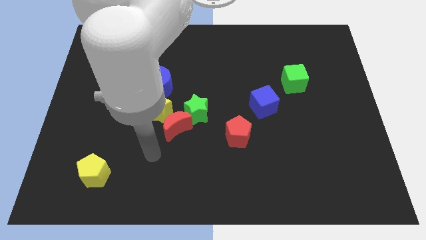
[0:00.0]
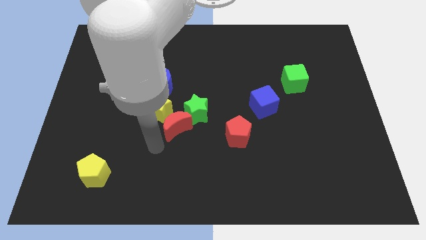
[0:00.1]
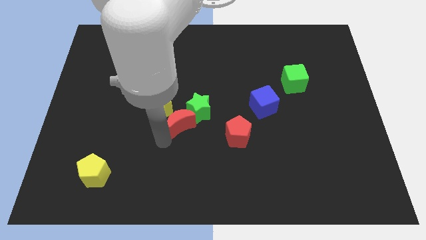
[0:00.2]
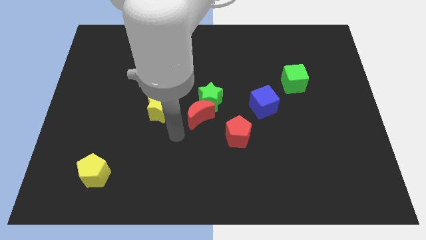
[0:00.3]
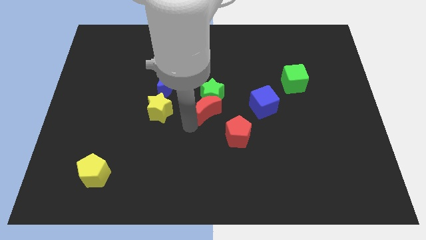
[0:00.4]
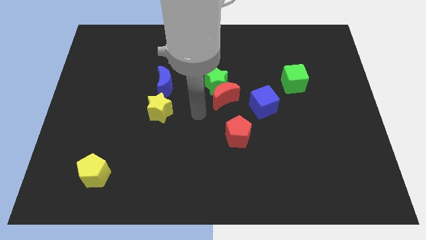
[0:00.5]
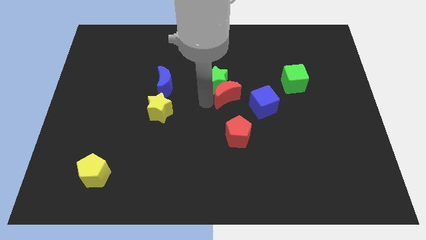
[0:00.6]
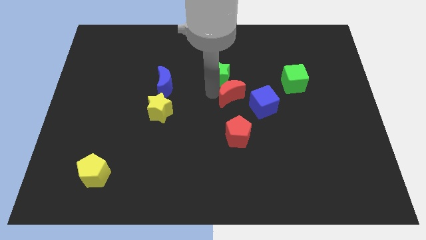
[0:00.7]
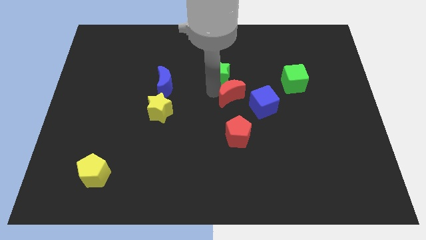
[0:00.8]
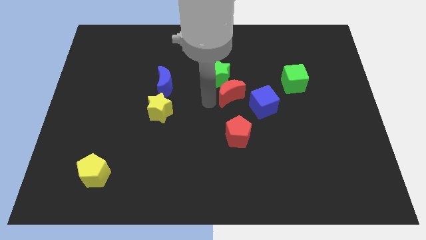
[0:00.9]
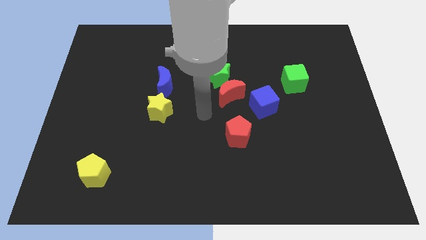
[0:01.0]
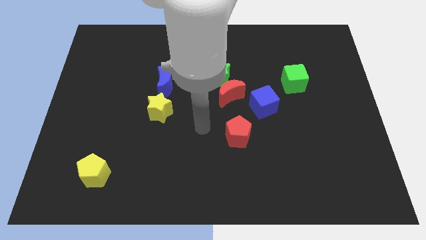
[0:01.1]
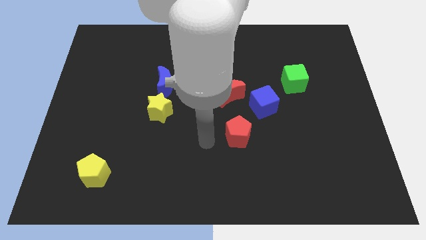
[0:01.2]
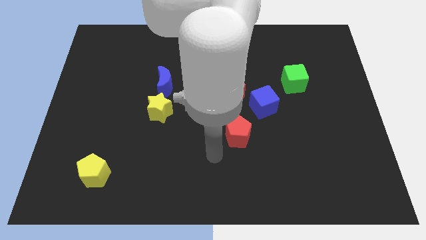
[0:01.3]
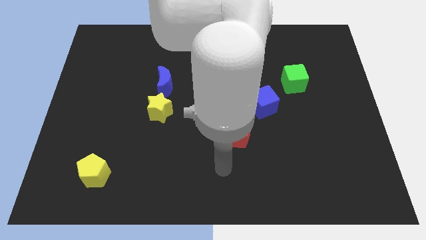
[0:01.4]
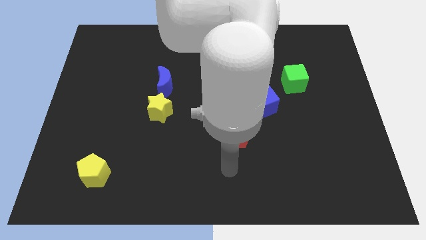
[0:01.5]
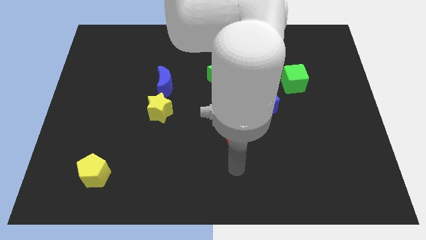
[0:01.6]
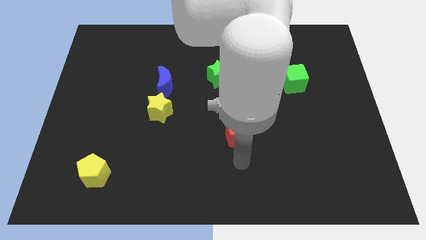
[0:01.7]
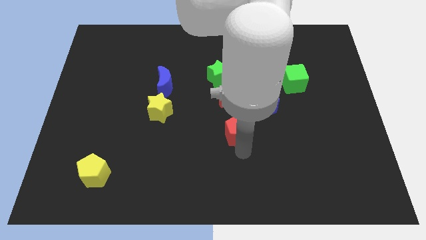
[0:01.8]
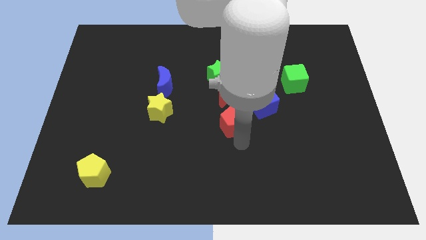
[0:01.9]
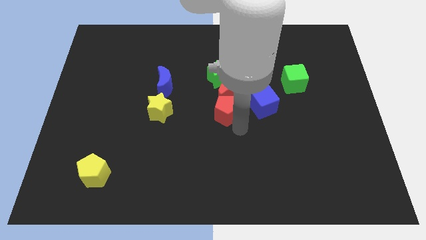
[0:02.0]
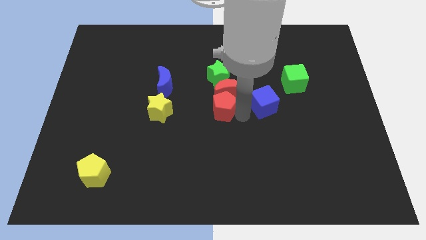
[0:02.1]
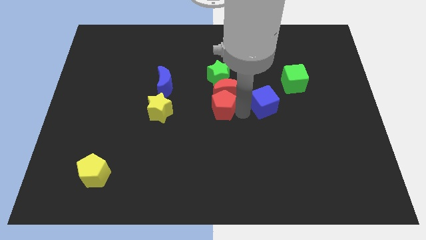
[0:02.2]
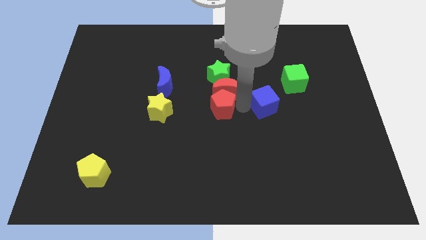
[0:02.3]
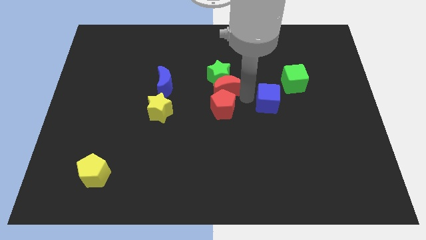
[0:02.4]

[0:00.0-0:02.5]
place red pentagon to the center of the board

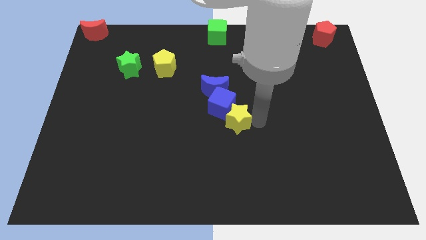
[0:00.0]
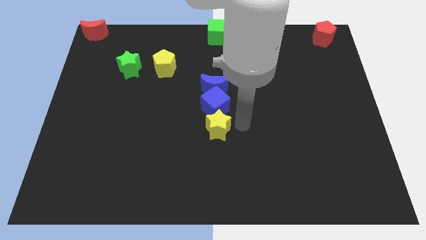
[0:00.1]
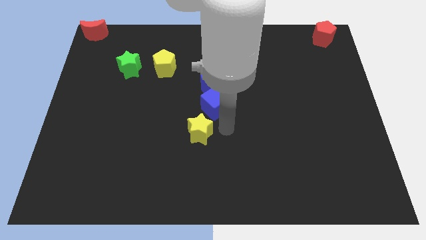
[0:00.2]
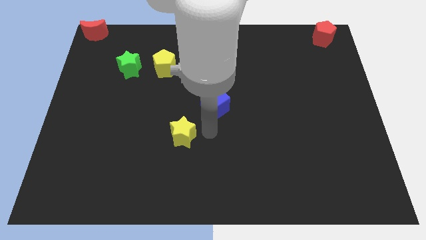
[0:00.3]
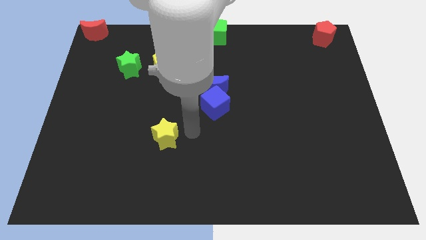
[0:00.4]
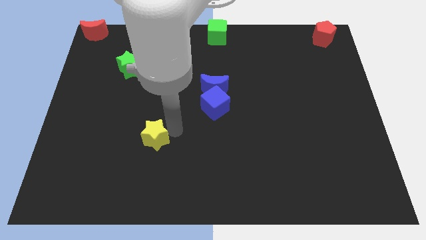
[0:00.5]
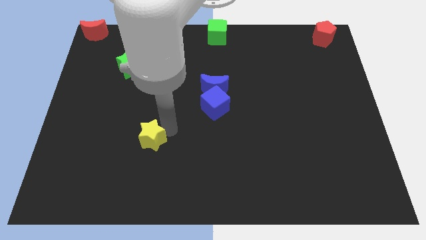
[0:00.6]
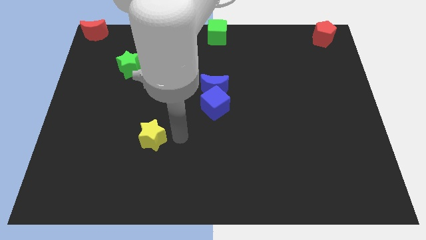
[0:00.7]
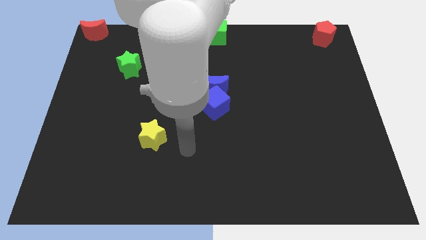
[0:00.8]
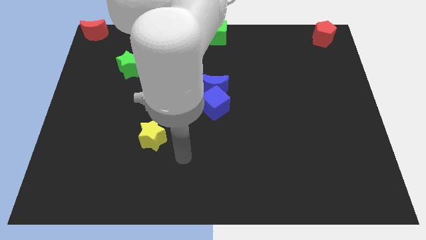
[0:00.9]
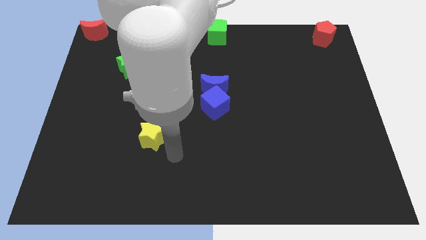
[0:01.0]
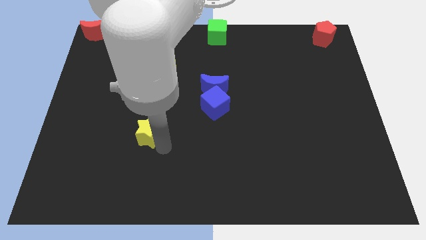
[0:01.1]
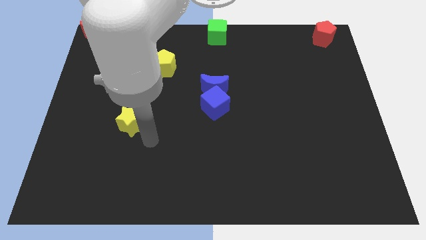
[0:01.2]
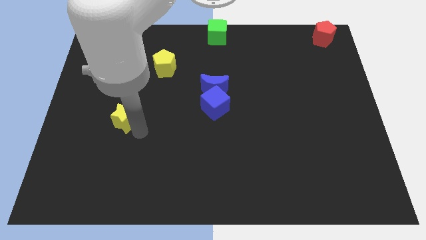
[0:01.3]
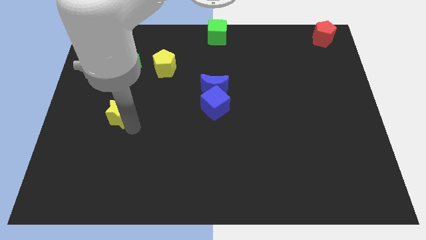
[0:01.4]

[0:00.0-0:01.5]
push yellow star below green star

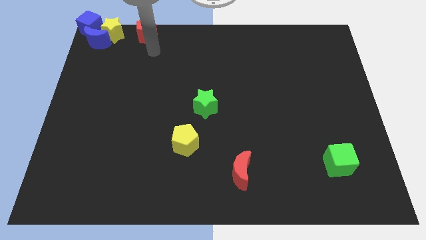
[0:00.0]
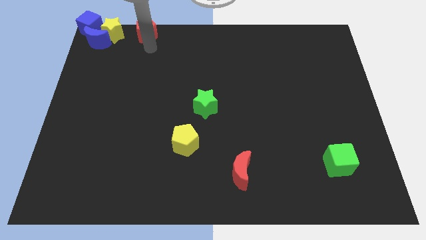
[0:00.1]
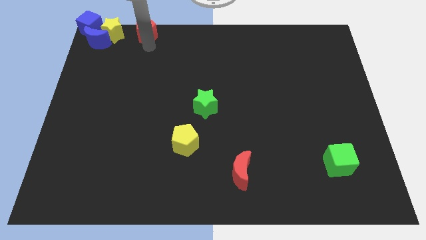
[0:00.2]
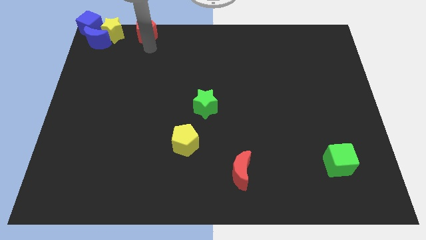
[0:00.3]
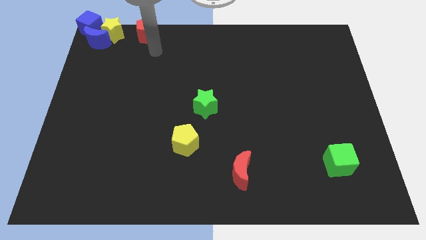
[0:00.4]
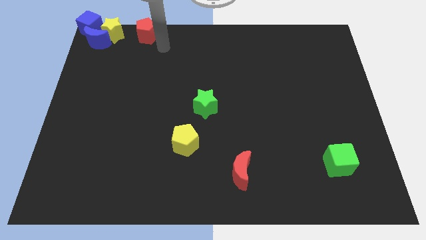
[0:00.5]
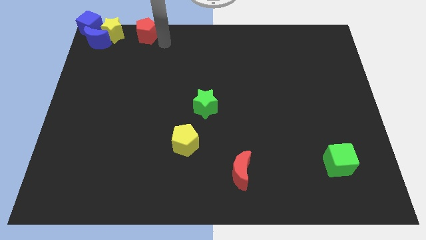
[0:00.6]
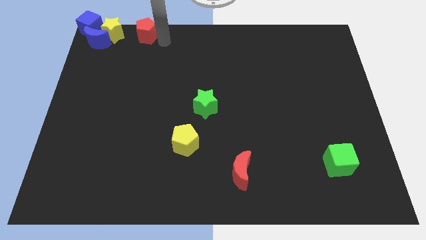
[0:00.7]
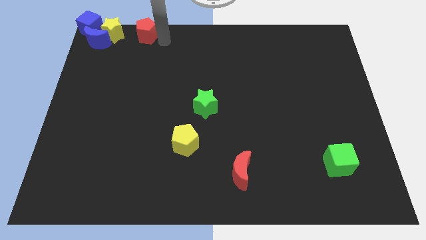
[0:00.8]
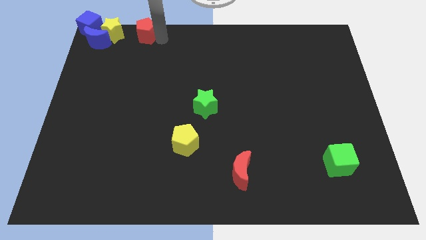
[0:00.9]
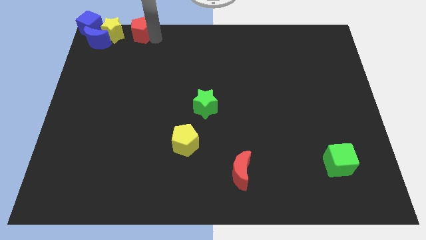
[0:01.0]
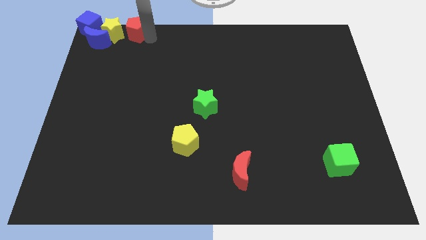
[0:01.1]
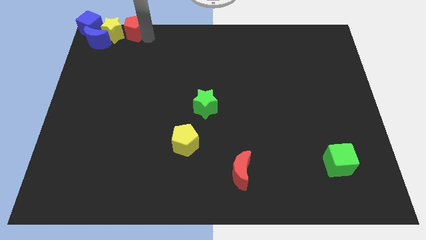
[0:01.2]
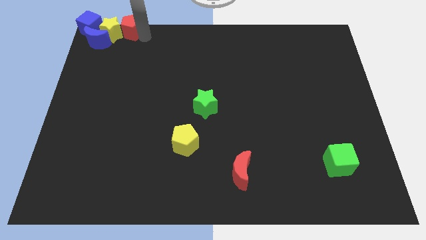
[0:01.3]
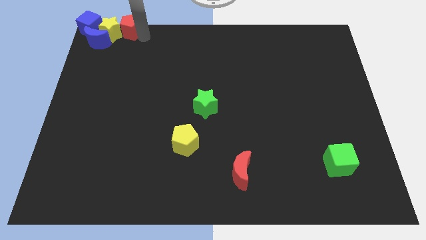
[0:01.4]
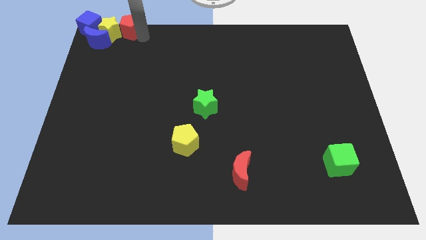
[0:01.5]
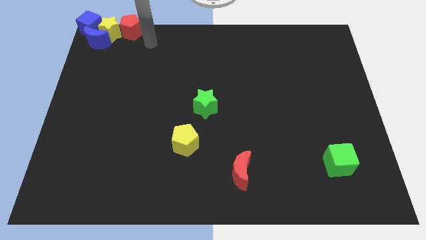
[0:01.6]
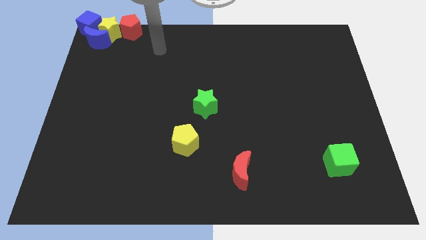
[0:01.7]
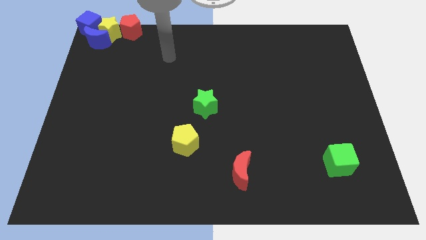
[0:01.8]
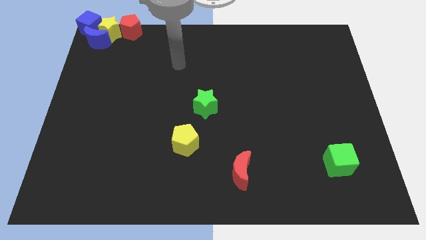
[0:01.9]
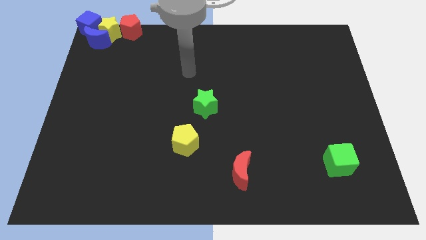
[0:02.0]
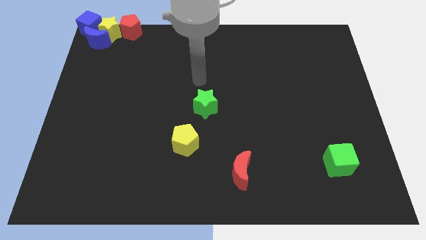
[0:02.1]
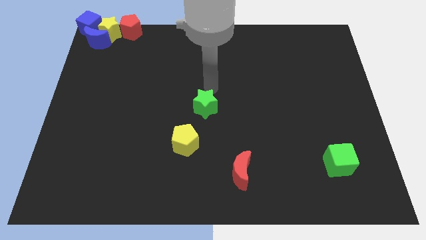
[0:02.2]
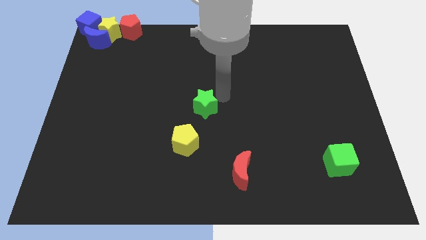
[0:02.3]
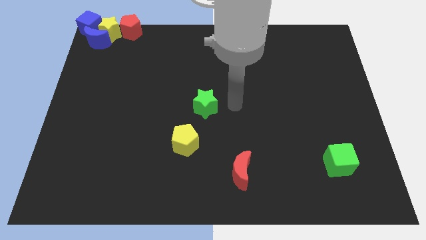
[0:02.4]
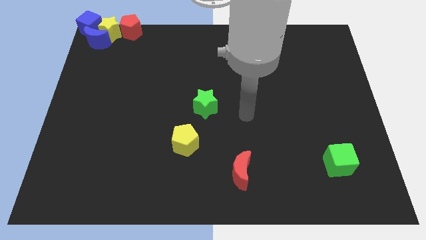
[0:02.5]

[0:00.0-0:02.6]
move the red pentagon to the right side of the yellow star

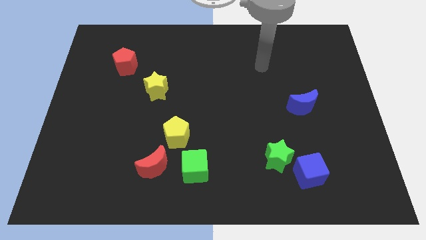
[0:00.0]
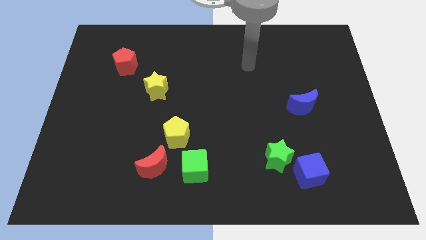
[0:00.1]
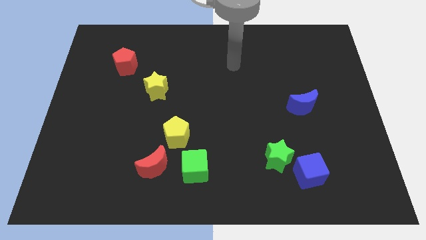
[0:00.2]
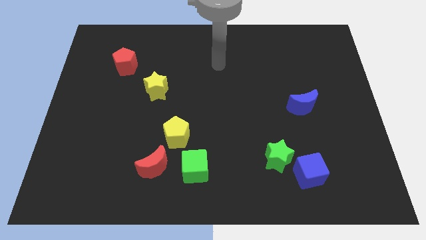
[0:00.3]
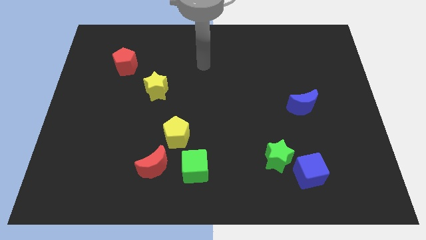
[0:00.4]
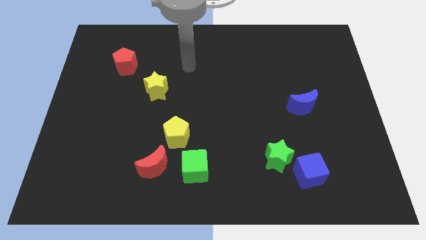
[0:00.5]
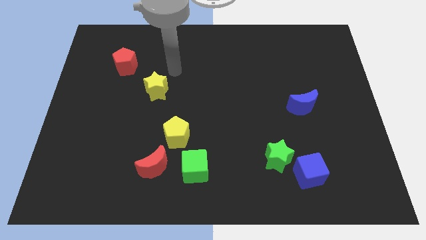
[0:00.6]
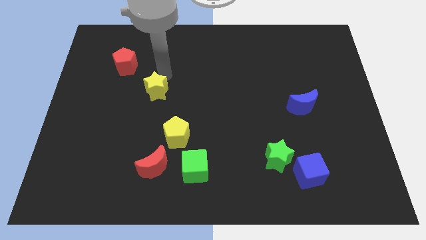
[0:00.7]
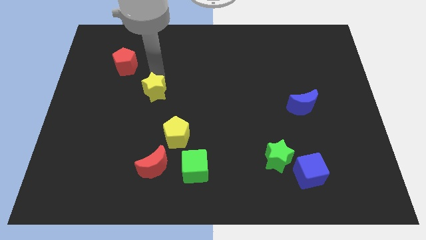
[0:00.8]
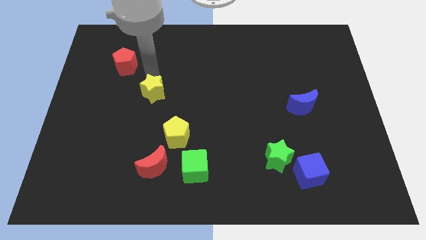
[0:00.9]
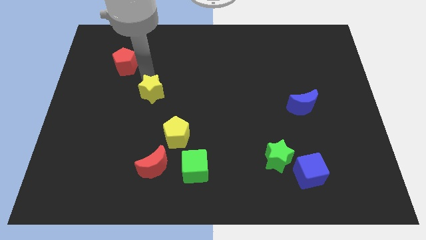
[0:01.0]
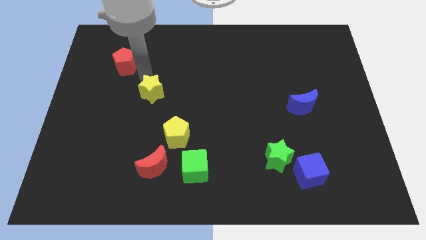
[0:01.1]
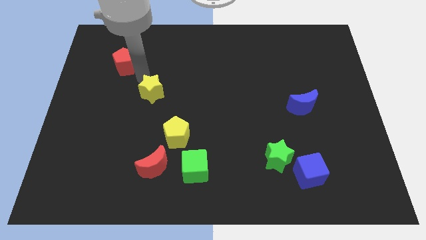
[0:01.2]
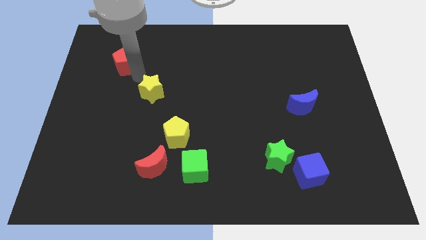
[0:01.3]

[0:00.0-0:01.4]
place the arm in between the red pentagon and yellow star

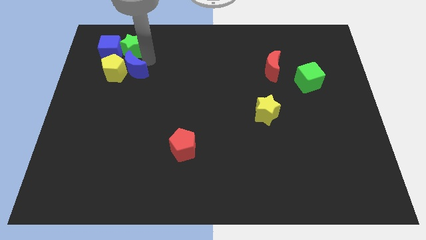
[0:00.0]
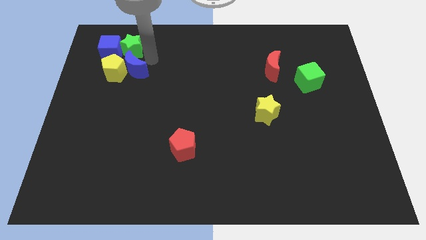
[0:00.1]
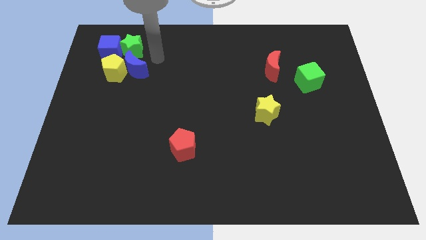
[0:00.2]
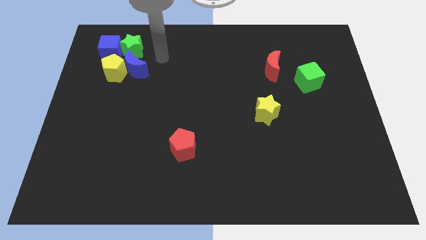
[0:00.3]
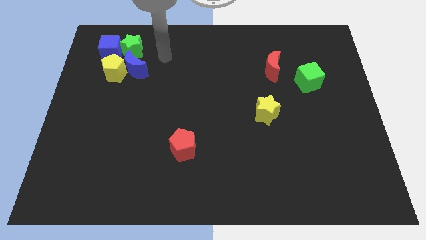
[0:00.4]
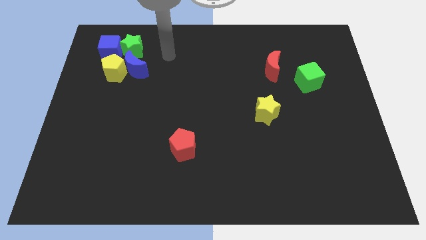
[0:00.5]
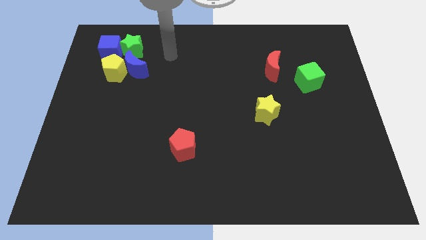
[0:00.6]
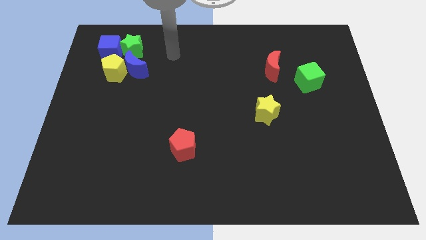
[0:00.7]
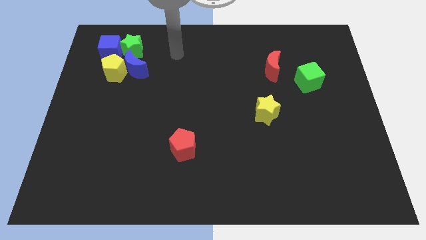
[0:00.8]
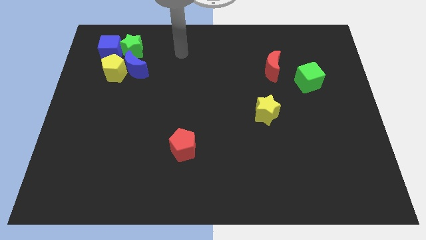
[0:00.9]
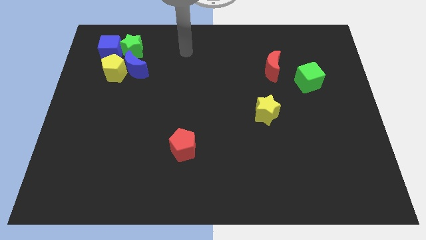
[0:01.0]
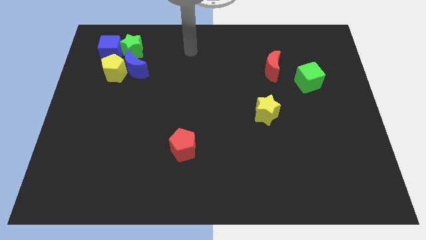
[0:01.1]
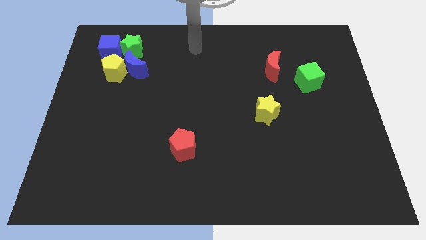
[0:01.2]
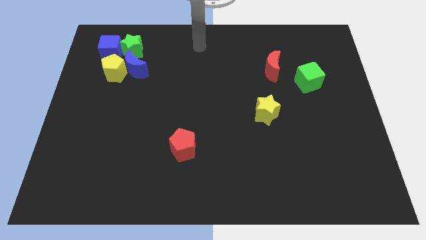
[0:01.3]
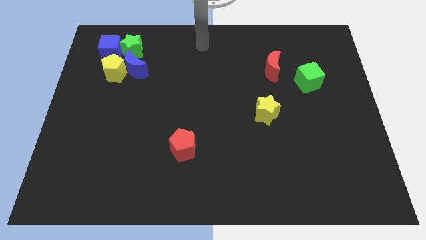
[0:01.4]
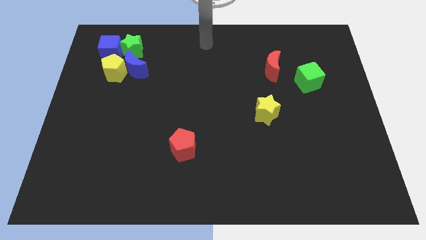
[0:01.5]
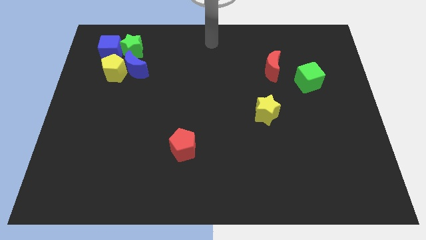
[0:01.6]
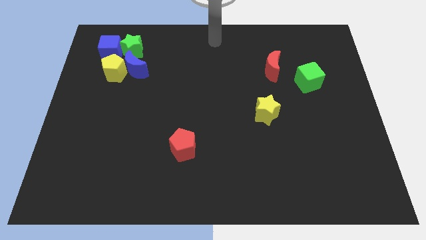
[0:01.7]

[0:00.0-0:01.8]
point your arm at the top center of the board
